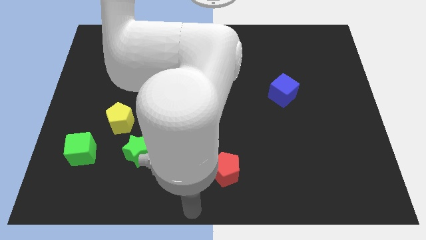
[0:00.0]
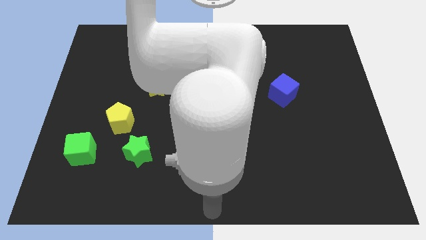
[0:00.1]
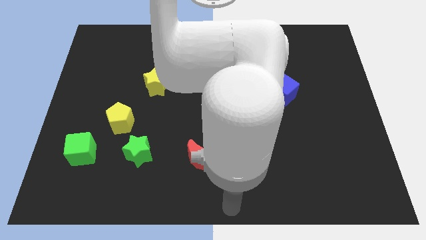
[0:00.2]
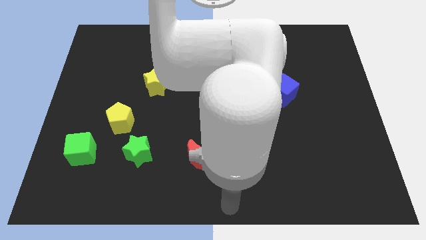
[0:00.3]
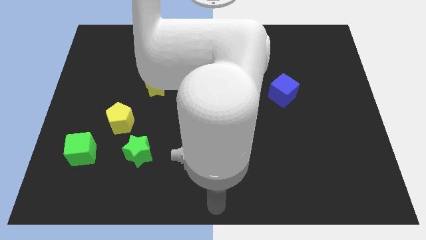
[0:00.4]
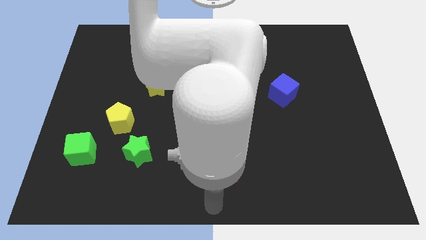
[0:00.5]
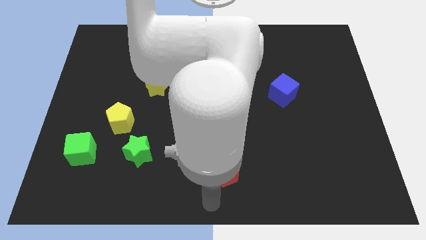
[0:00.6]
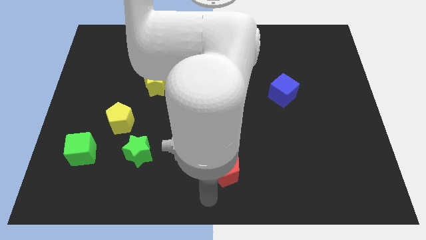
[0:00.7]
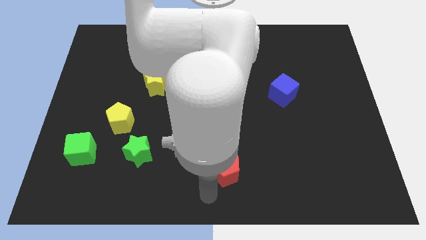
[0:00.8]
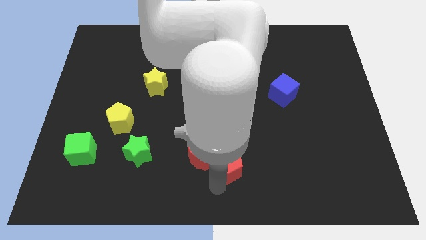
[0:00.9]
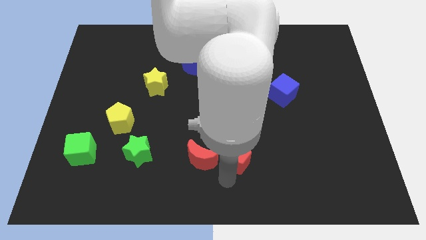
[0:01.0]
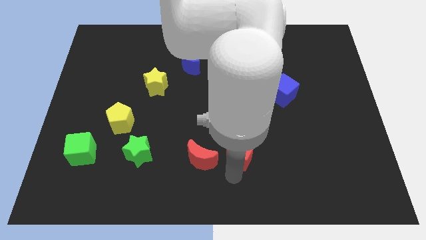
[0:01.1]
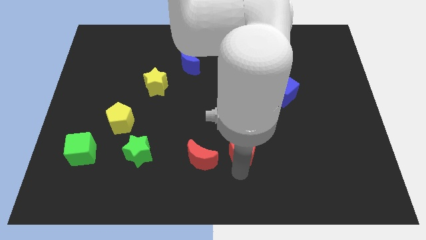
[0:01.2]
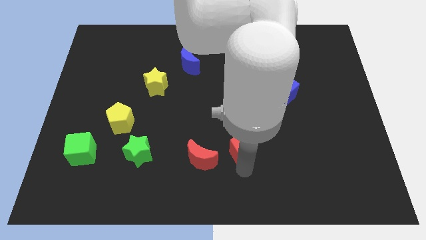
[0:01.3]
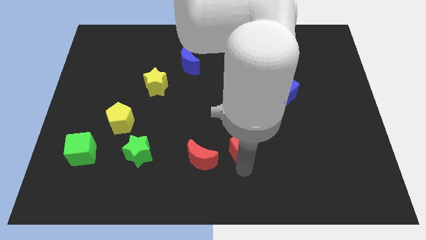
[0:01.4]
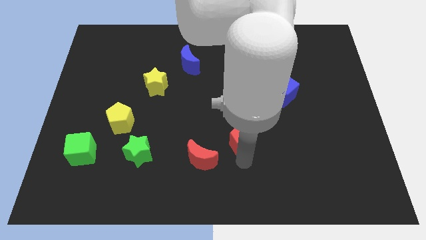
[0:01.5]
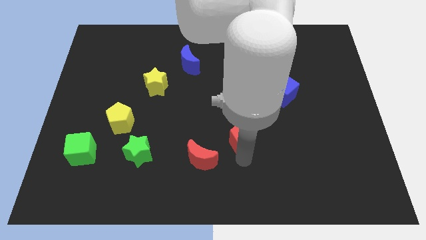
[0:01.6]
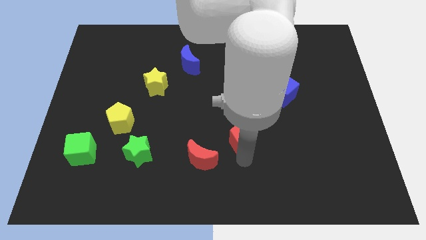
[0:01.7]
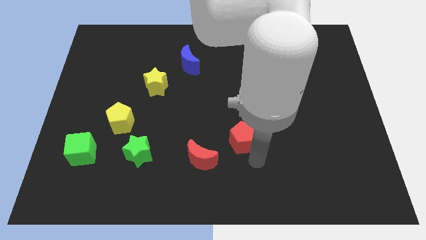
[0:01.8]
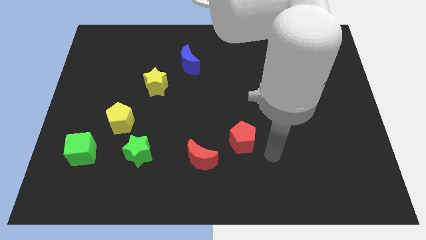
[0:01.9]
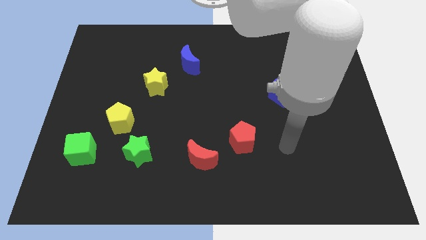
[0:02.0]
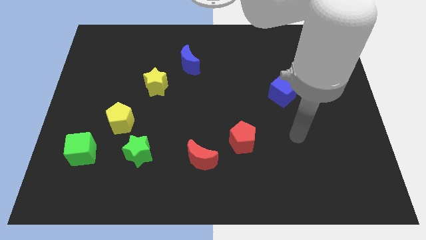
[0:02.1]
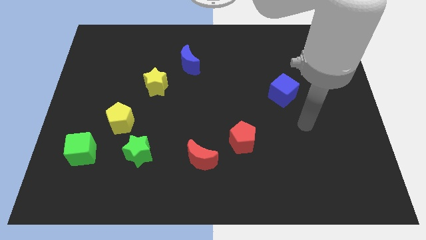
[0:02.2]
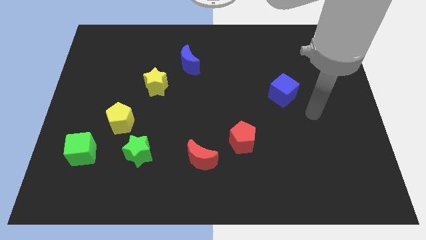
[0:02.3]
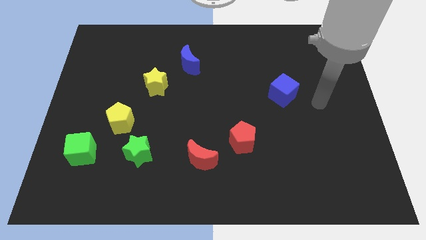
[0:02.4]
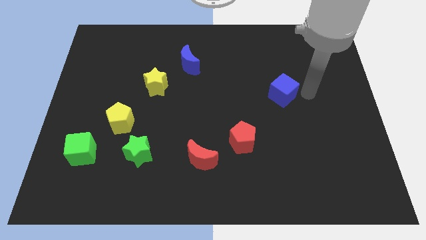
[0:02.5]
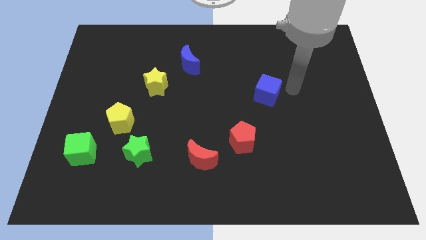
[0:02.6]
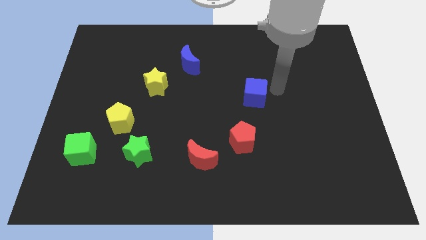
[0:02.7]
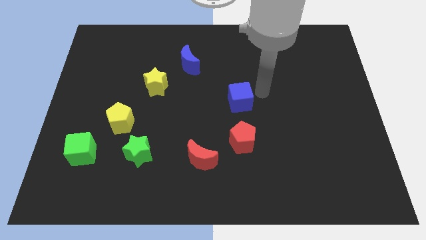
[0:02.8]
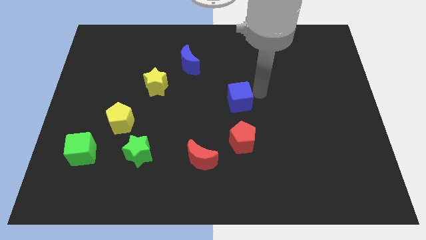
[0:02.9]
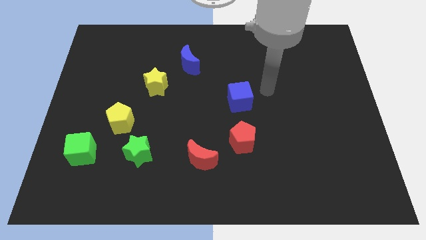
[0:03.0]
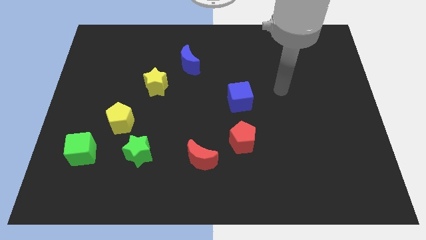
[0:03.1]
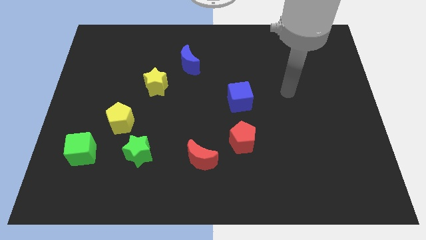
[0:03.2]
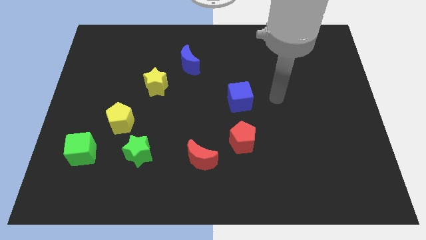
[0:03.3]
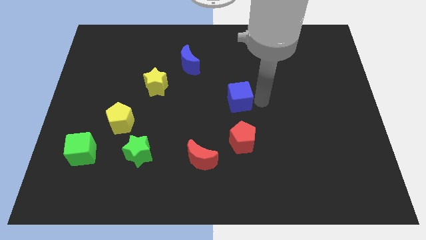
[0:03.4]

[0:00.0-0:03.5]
move the blue cube above the red pentagon

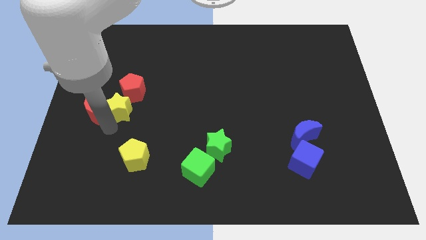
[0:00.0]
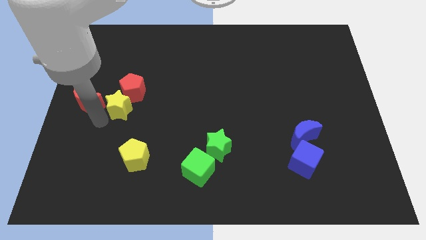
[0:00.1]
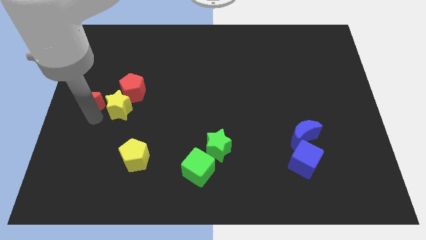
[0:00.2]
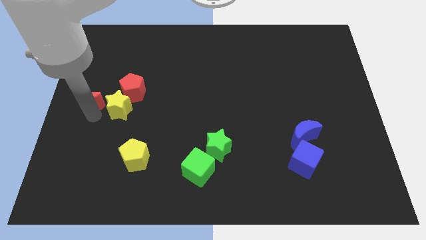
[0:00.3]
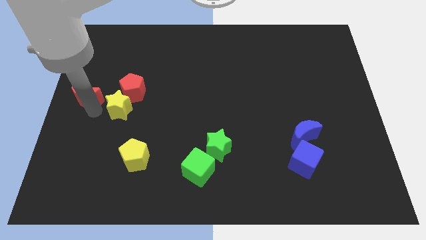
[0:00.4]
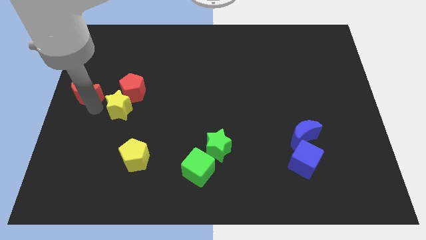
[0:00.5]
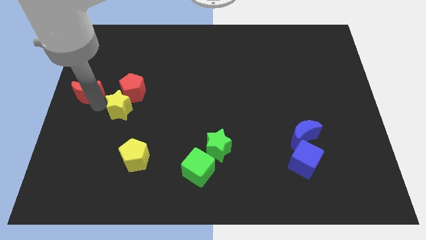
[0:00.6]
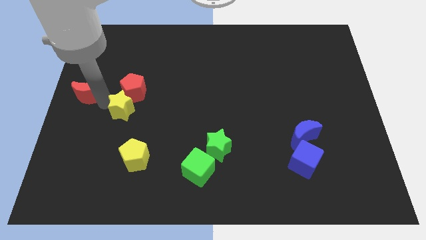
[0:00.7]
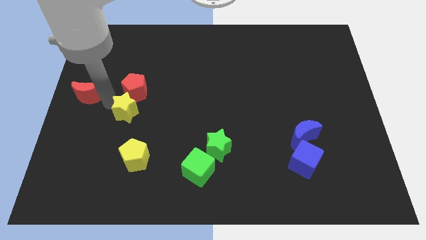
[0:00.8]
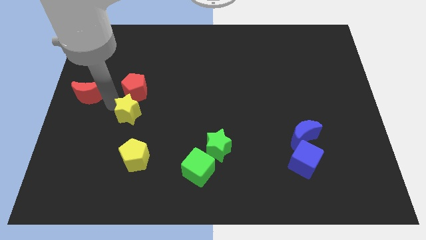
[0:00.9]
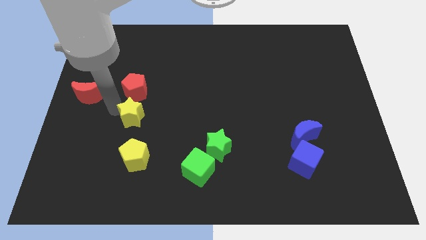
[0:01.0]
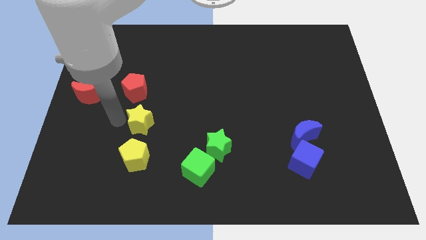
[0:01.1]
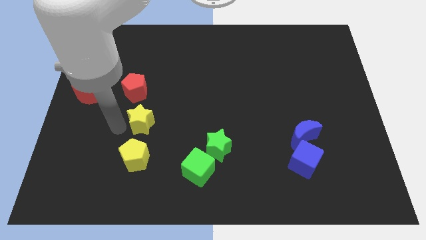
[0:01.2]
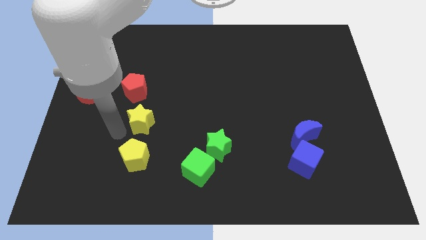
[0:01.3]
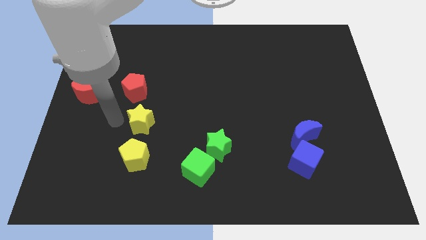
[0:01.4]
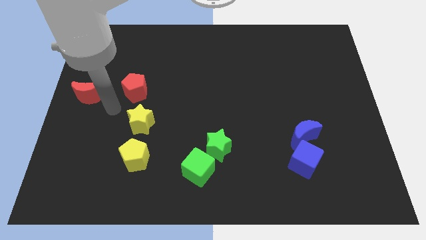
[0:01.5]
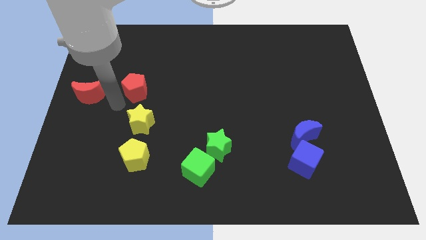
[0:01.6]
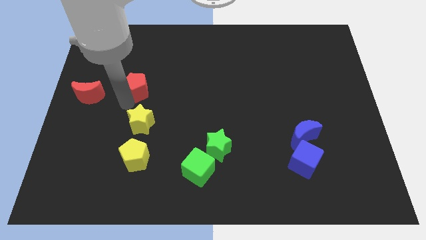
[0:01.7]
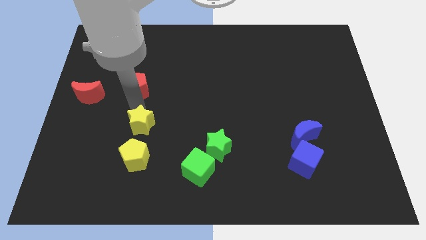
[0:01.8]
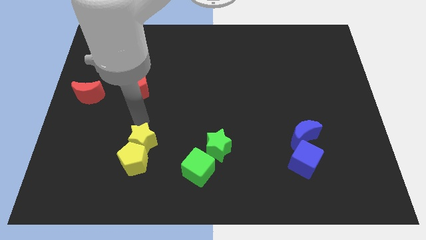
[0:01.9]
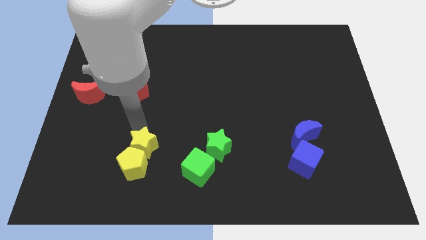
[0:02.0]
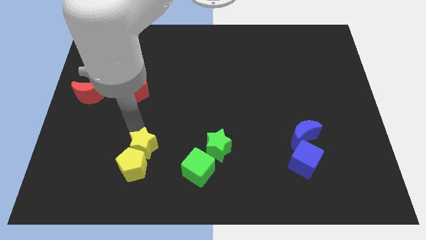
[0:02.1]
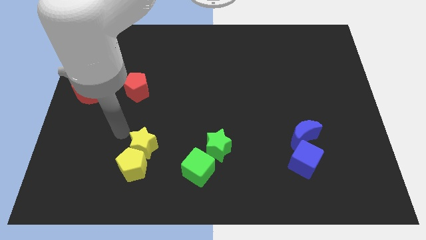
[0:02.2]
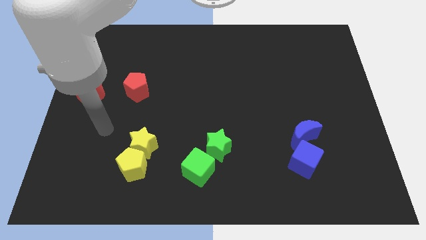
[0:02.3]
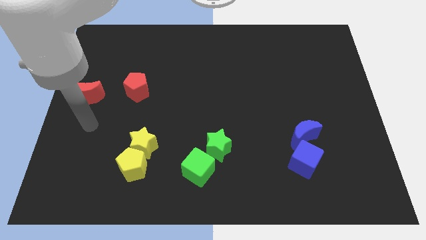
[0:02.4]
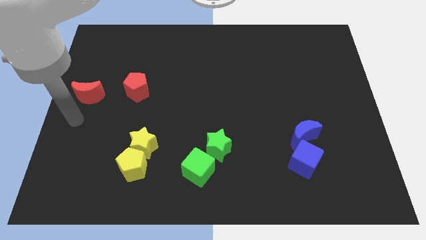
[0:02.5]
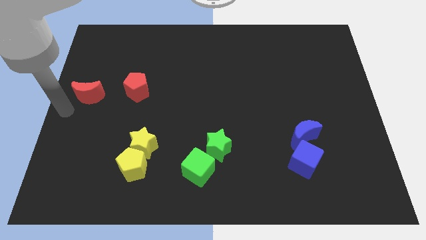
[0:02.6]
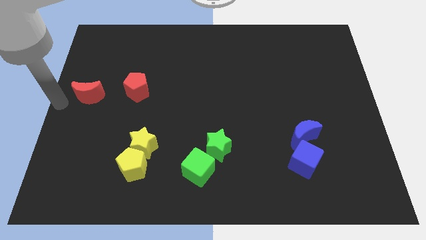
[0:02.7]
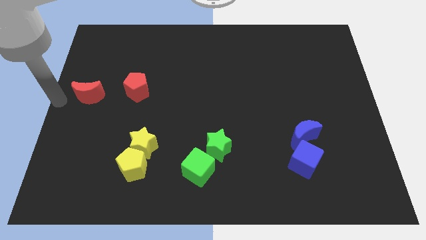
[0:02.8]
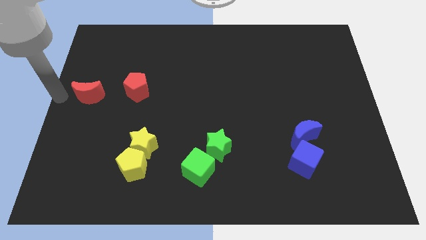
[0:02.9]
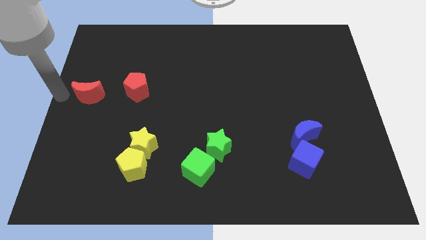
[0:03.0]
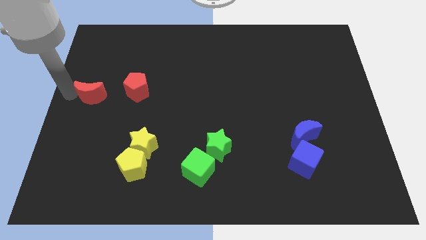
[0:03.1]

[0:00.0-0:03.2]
move the yellow star away from the red moon

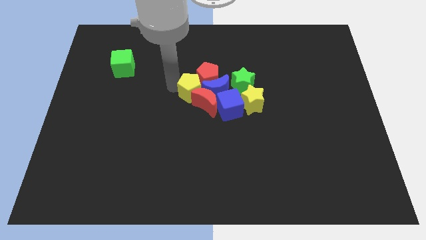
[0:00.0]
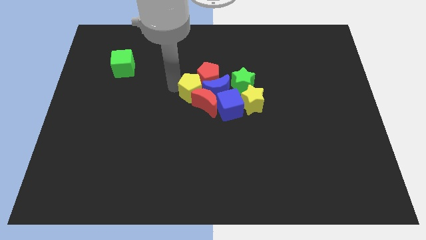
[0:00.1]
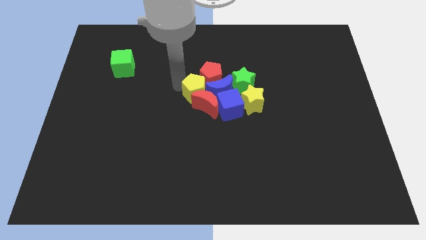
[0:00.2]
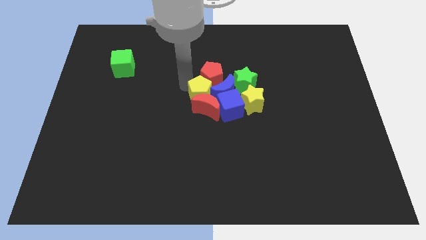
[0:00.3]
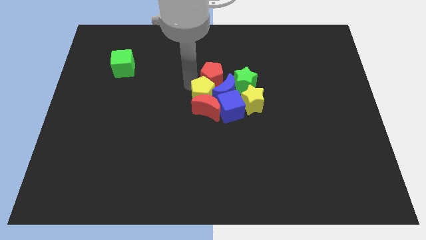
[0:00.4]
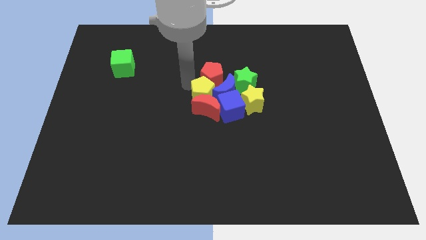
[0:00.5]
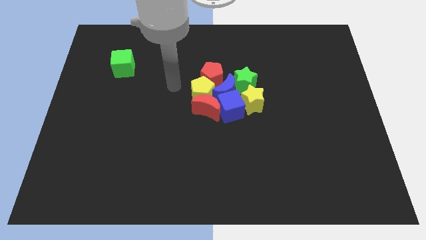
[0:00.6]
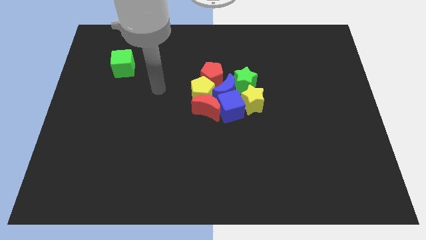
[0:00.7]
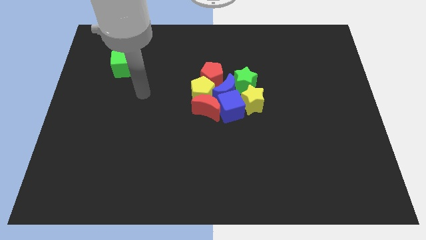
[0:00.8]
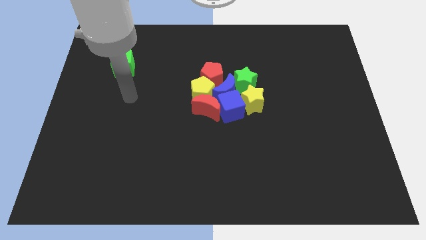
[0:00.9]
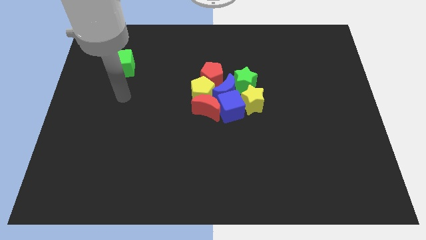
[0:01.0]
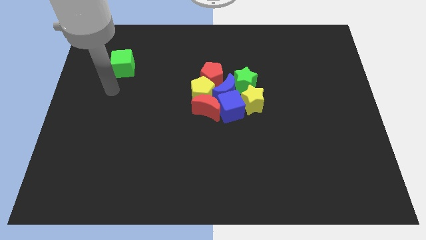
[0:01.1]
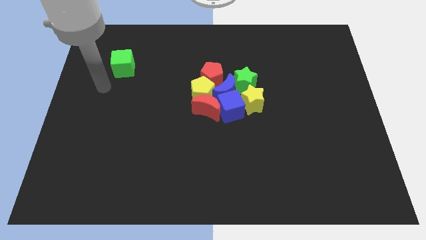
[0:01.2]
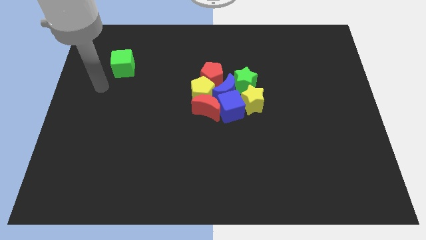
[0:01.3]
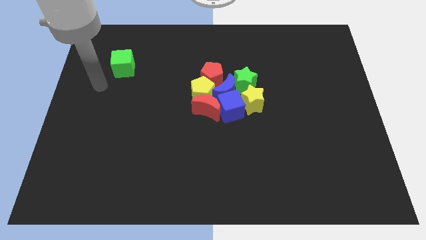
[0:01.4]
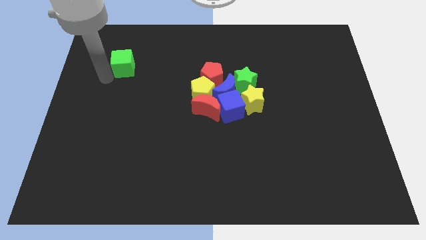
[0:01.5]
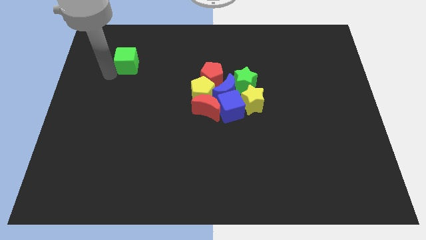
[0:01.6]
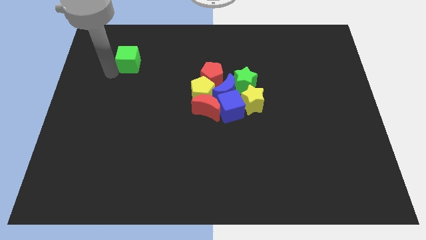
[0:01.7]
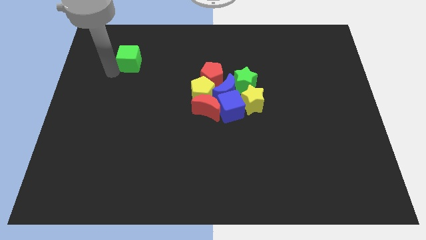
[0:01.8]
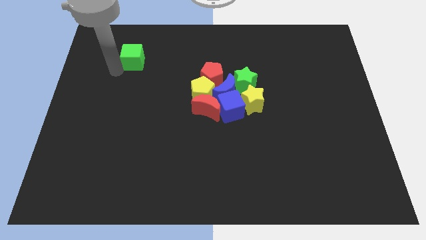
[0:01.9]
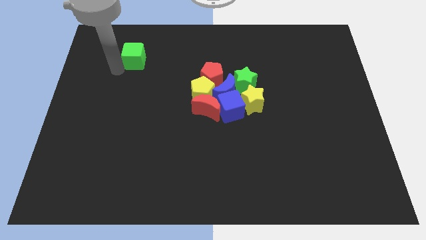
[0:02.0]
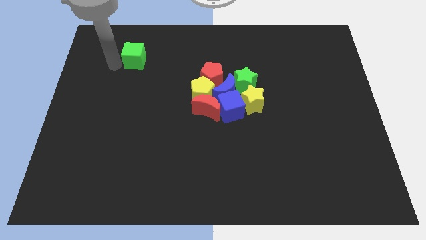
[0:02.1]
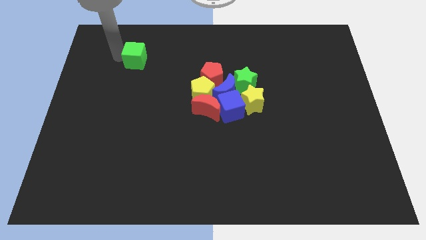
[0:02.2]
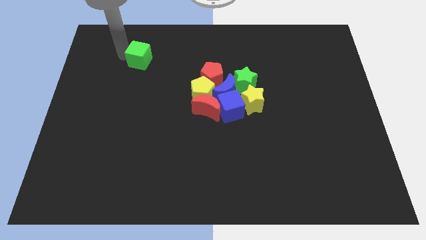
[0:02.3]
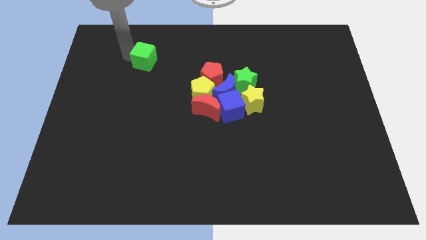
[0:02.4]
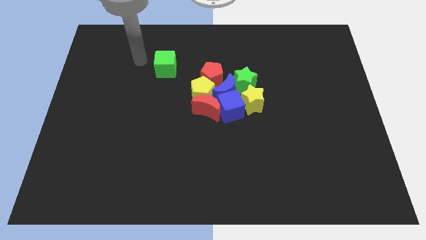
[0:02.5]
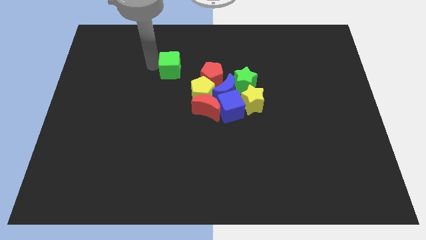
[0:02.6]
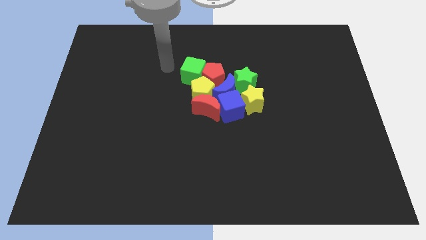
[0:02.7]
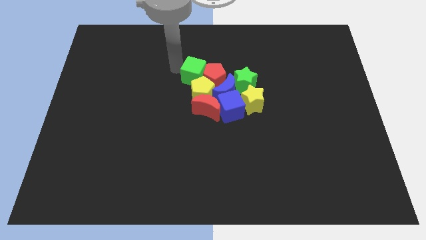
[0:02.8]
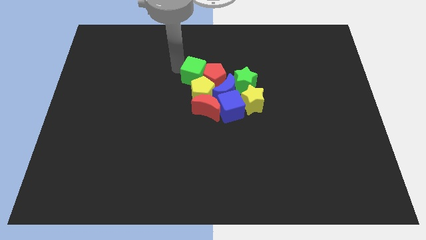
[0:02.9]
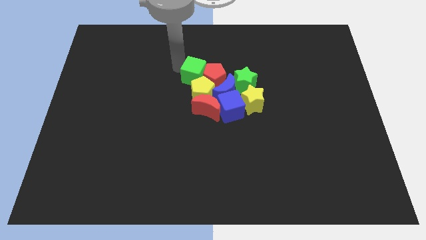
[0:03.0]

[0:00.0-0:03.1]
push the green cube into the red pentagon
